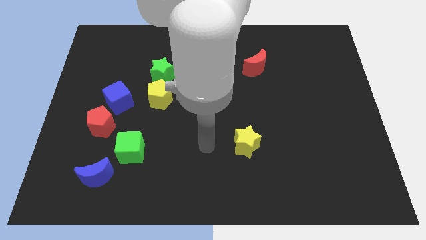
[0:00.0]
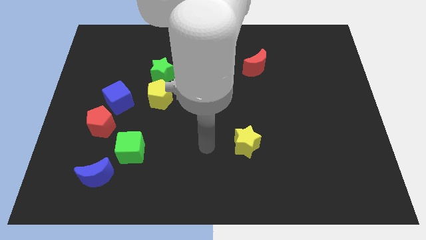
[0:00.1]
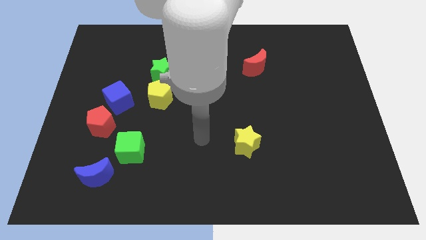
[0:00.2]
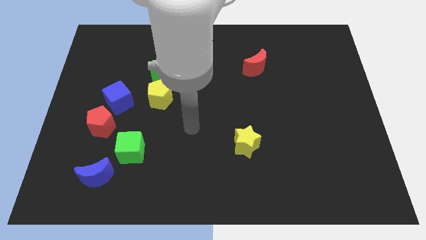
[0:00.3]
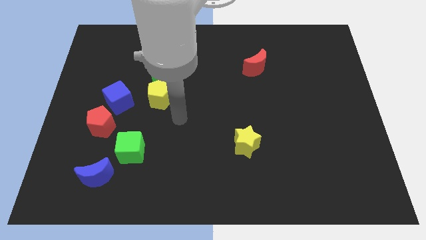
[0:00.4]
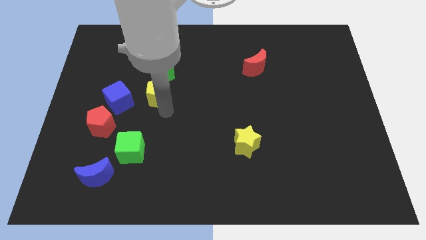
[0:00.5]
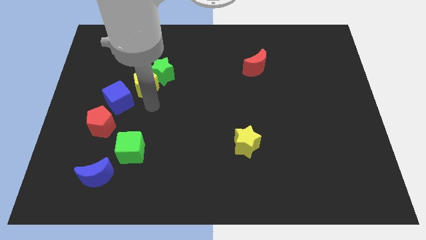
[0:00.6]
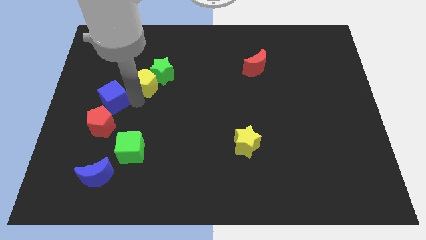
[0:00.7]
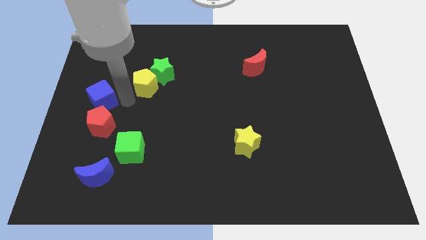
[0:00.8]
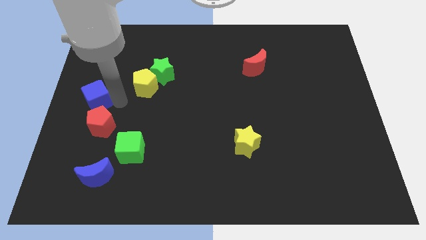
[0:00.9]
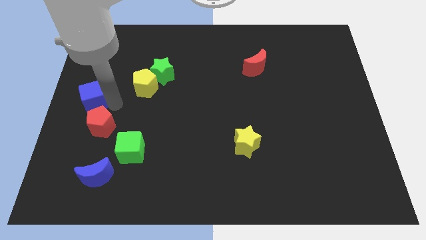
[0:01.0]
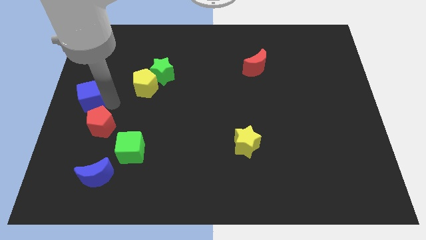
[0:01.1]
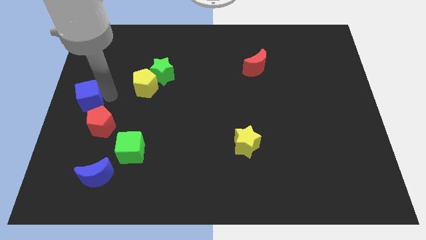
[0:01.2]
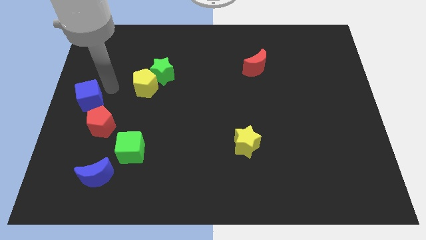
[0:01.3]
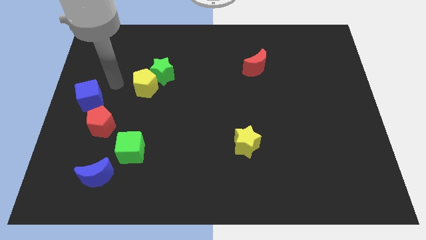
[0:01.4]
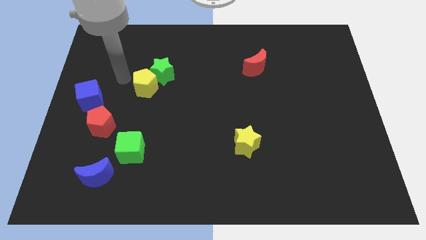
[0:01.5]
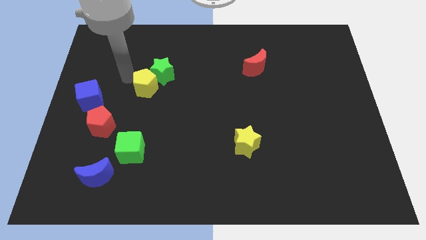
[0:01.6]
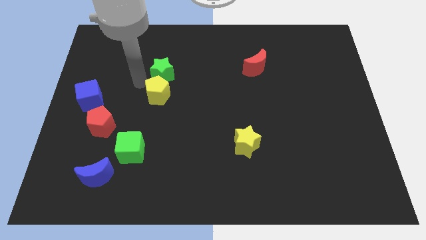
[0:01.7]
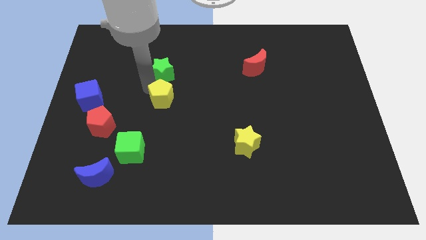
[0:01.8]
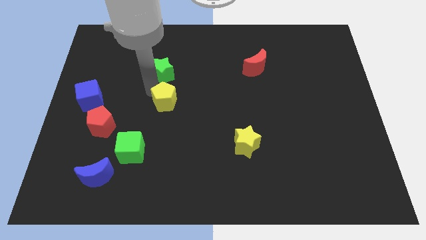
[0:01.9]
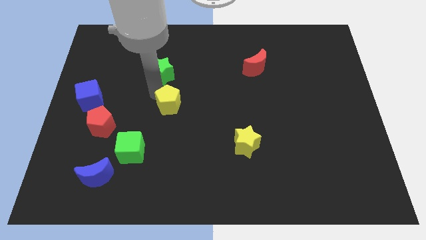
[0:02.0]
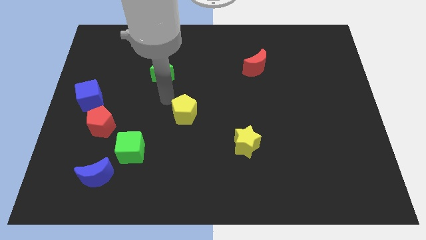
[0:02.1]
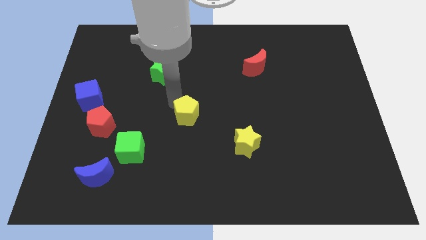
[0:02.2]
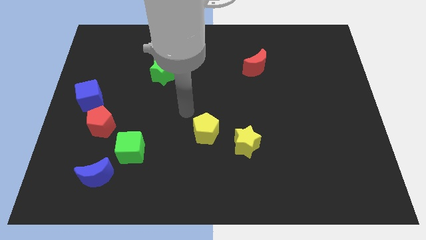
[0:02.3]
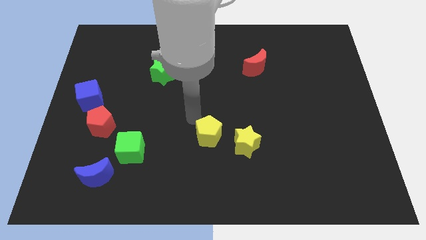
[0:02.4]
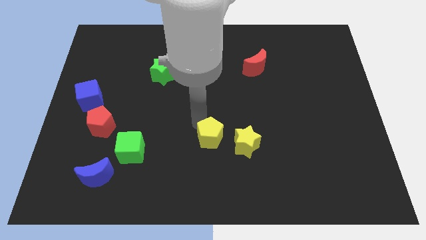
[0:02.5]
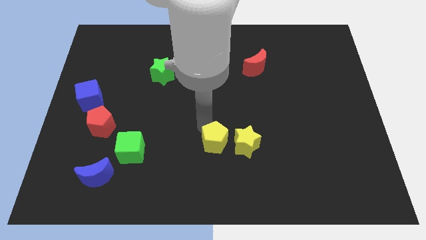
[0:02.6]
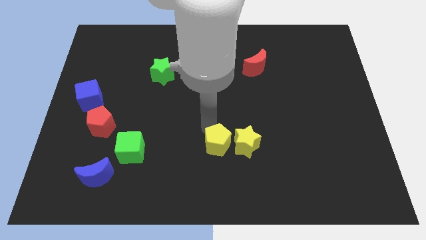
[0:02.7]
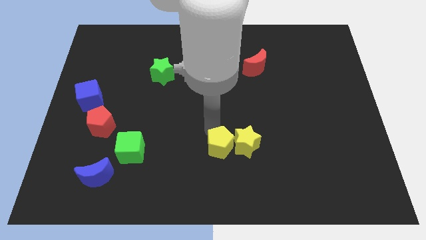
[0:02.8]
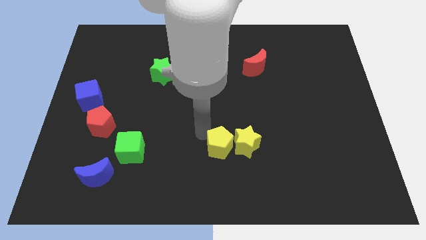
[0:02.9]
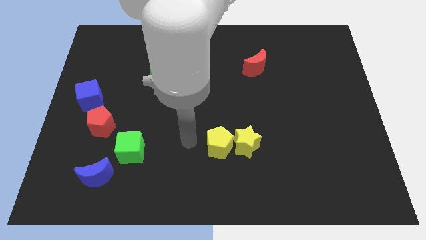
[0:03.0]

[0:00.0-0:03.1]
place the yellow pentagon to the left of the yellow star

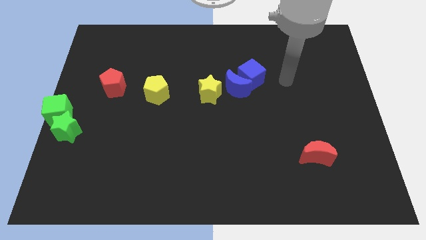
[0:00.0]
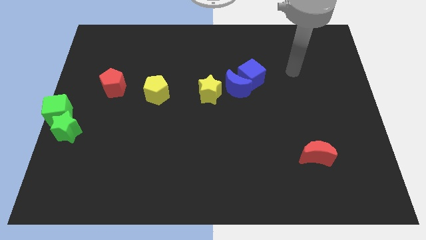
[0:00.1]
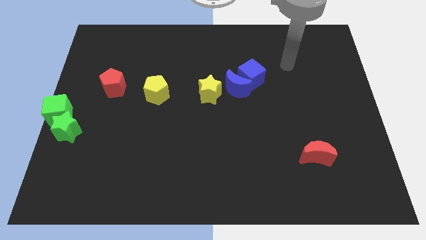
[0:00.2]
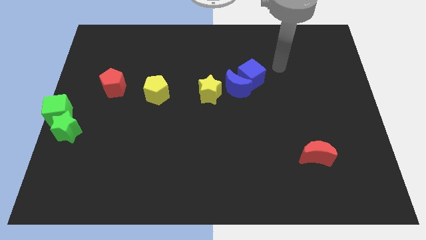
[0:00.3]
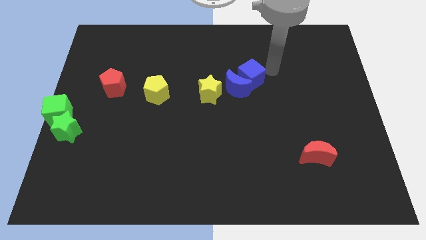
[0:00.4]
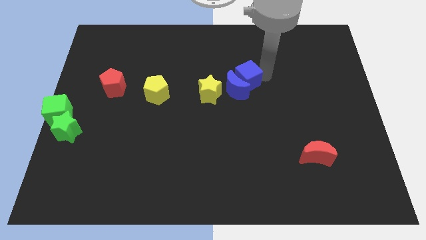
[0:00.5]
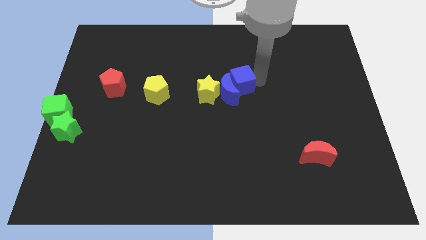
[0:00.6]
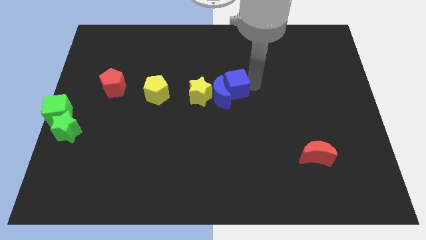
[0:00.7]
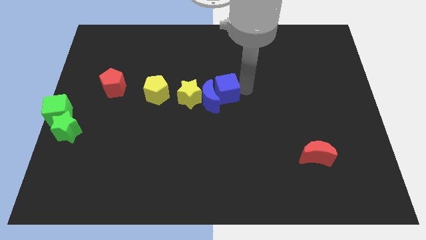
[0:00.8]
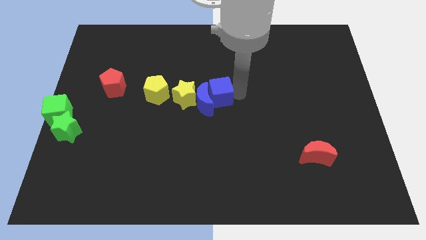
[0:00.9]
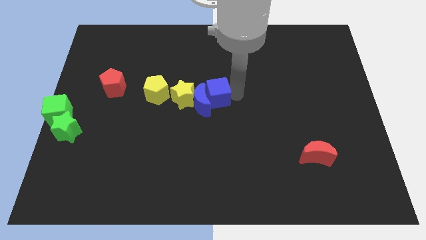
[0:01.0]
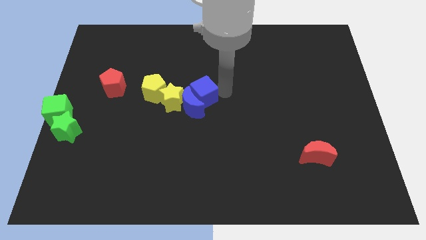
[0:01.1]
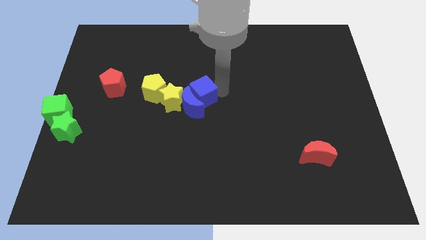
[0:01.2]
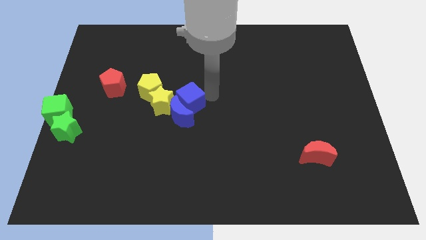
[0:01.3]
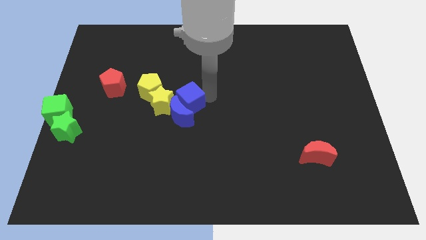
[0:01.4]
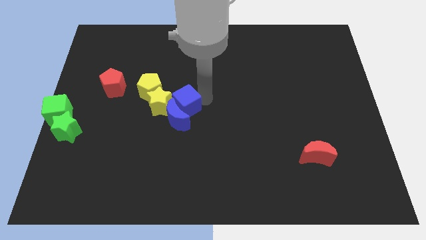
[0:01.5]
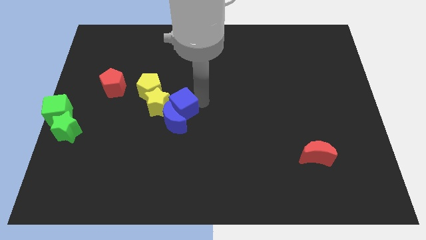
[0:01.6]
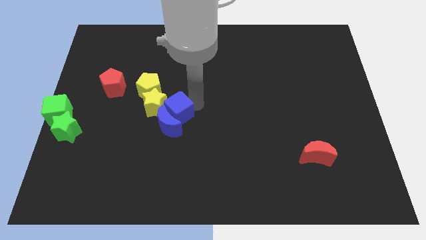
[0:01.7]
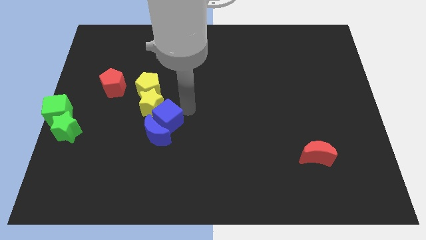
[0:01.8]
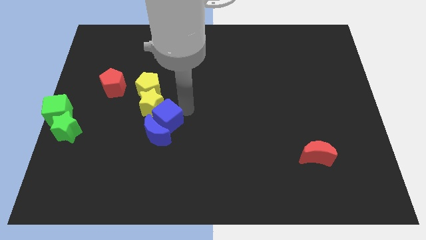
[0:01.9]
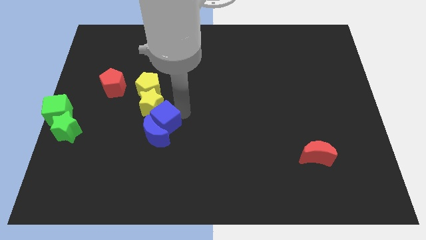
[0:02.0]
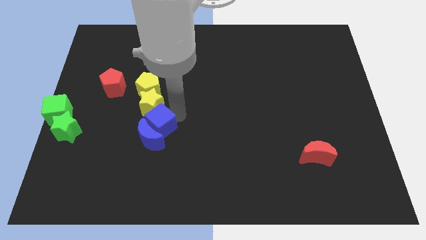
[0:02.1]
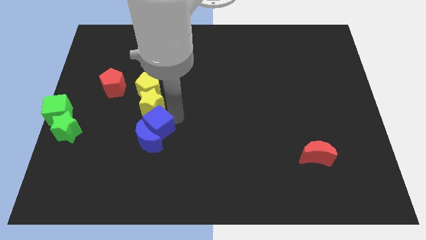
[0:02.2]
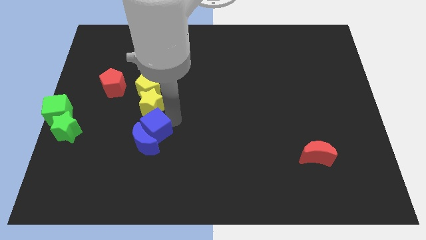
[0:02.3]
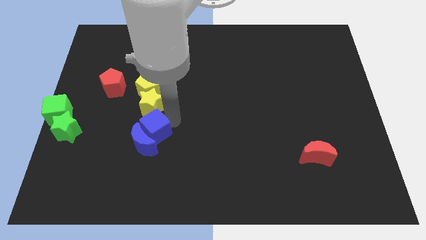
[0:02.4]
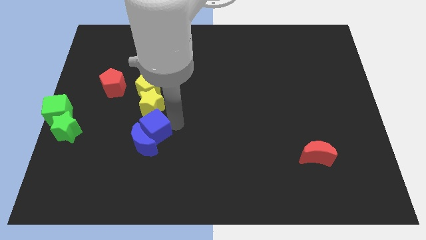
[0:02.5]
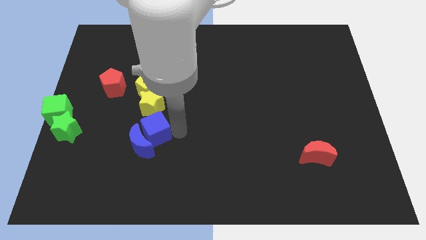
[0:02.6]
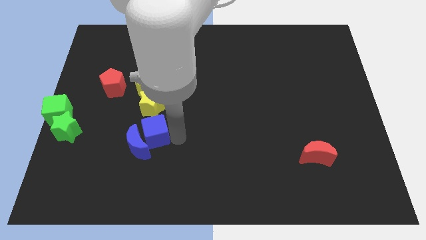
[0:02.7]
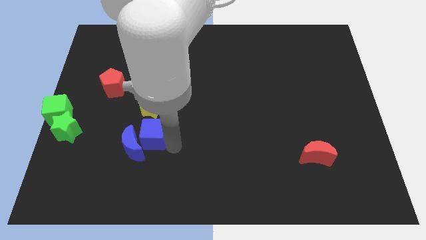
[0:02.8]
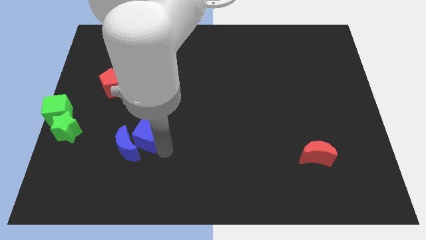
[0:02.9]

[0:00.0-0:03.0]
push the blue cube to the bottom side of the yellow star

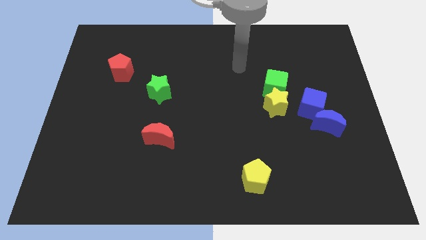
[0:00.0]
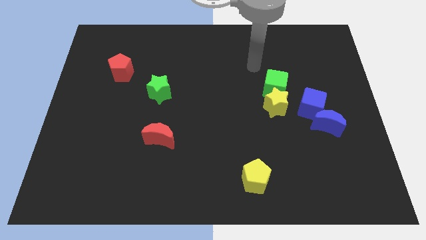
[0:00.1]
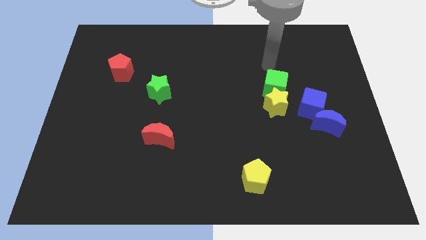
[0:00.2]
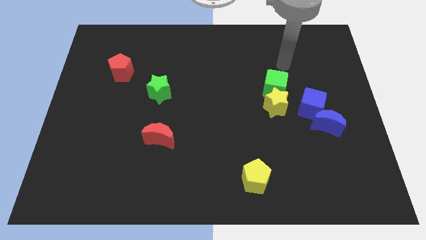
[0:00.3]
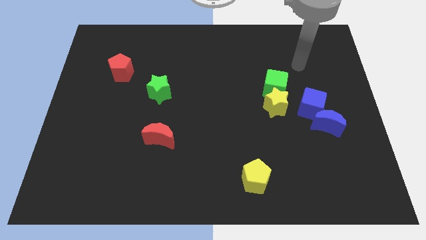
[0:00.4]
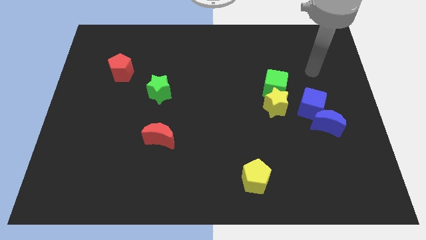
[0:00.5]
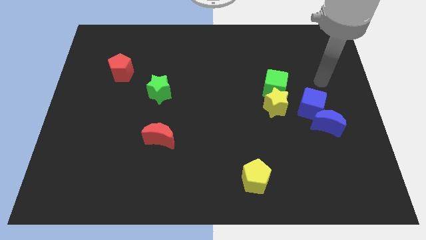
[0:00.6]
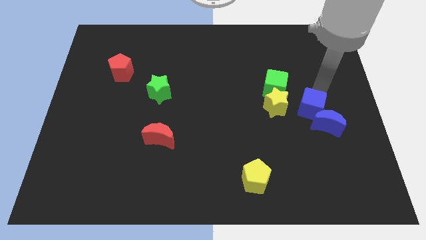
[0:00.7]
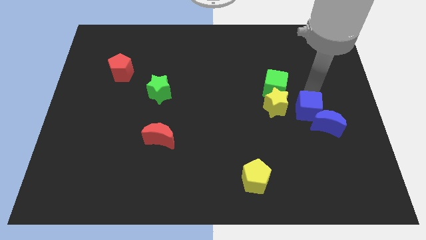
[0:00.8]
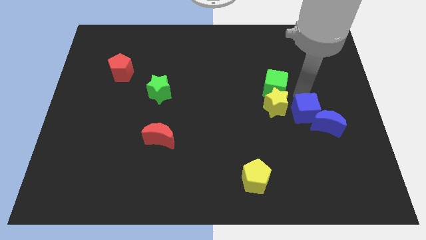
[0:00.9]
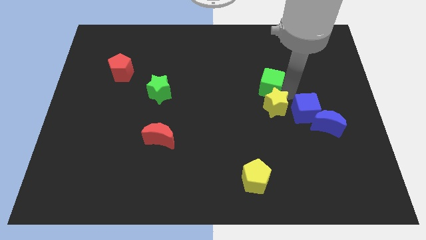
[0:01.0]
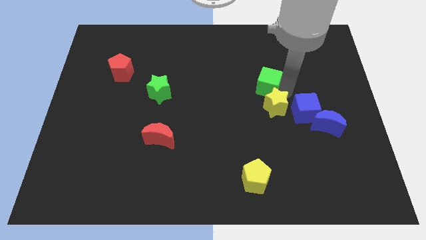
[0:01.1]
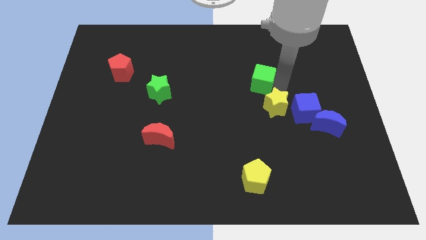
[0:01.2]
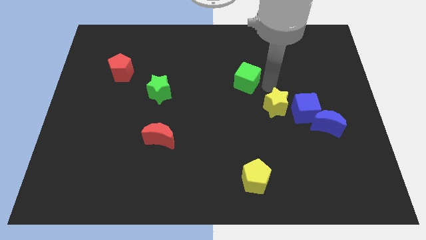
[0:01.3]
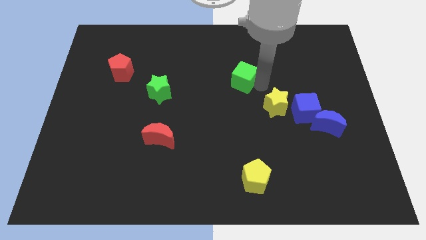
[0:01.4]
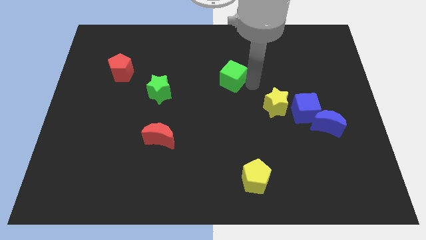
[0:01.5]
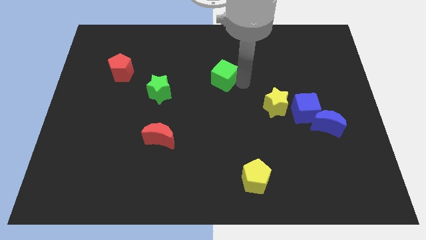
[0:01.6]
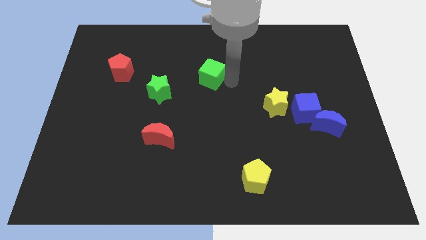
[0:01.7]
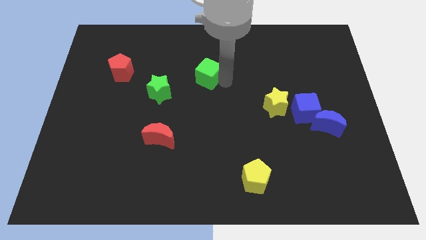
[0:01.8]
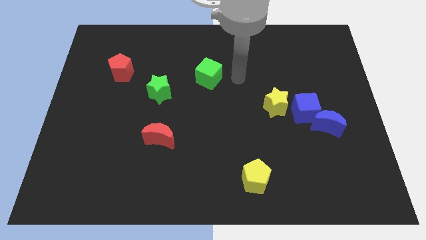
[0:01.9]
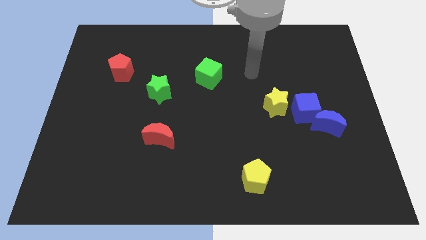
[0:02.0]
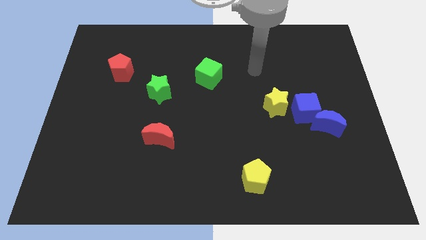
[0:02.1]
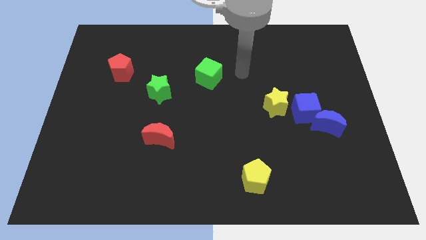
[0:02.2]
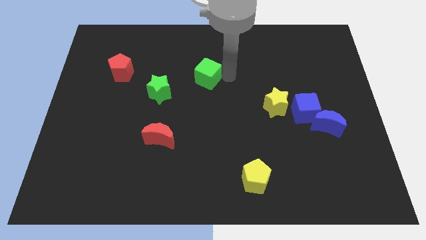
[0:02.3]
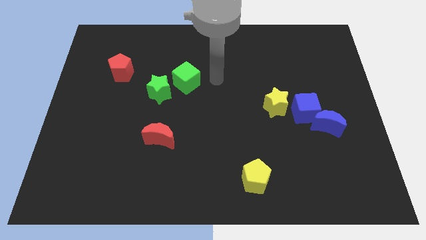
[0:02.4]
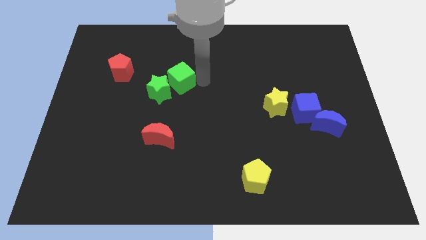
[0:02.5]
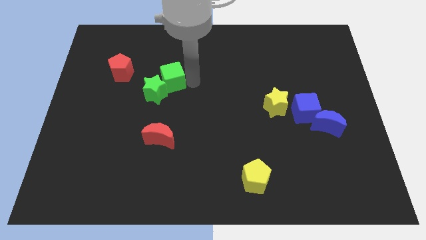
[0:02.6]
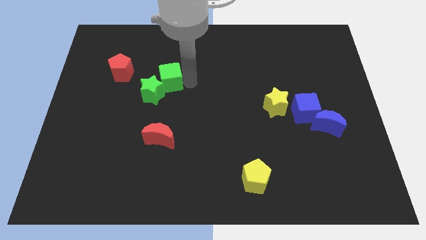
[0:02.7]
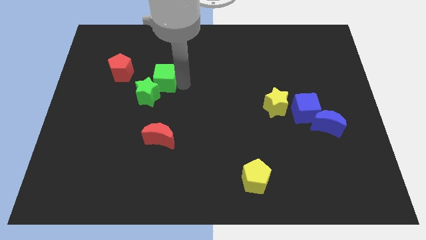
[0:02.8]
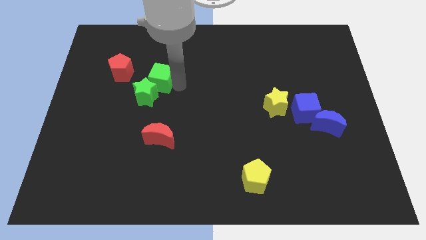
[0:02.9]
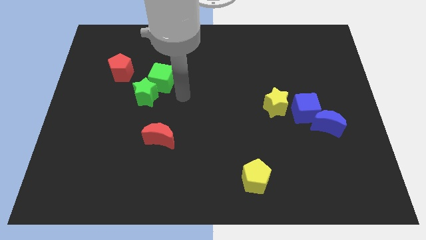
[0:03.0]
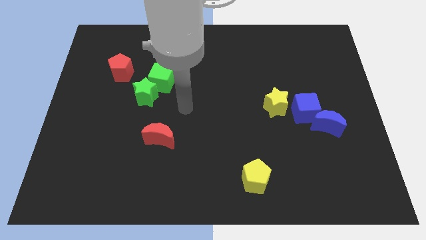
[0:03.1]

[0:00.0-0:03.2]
push the green cube into the green star
